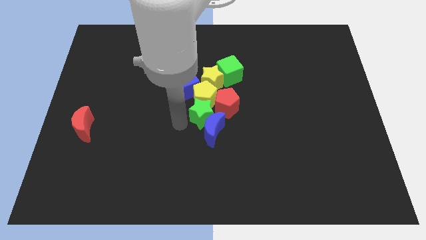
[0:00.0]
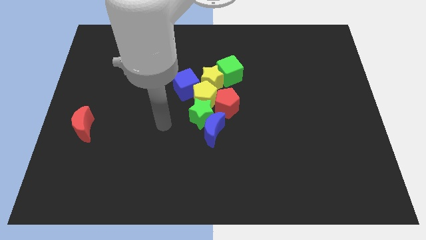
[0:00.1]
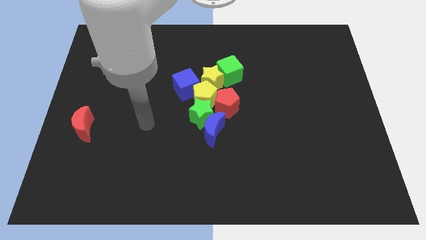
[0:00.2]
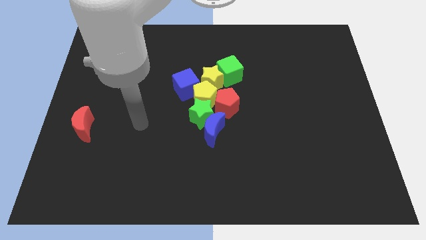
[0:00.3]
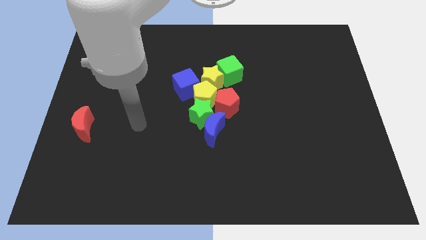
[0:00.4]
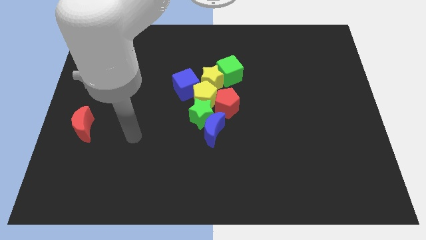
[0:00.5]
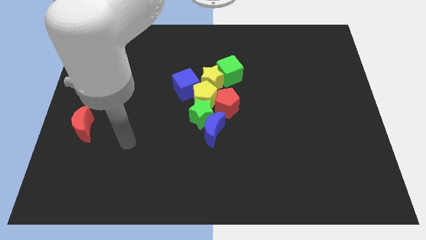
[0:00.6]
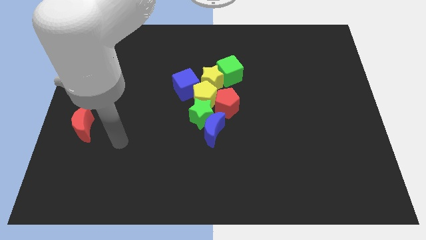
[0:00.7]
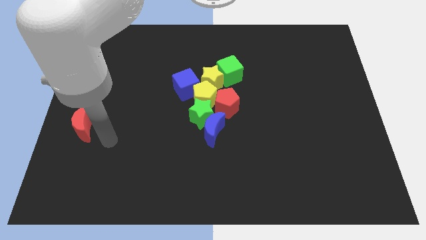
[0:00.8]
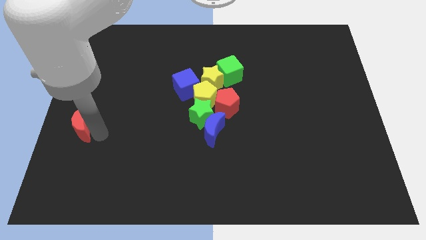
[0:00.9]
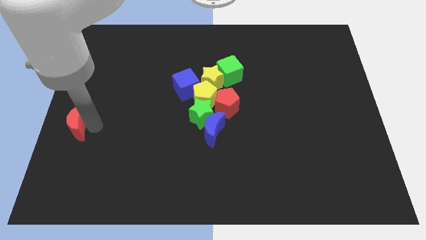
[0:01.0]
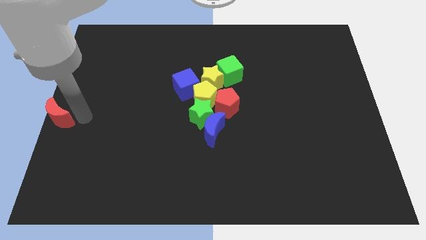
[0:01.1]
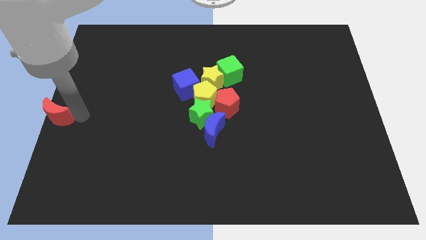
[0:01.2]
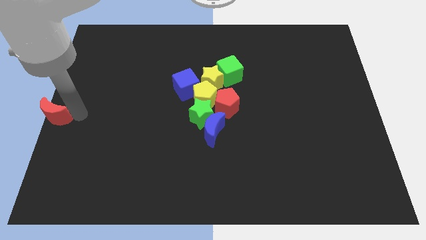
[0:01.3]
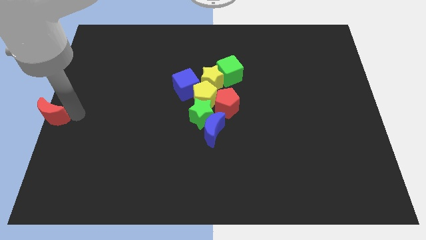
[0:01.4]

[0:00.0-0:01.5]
move the red moon to the left center of the board

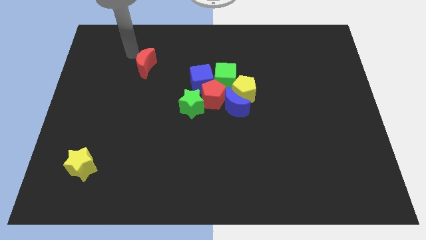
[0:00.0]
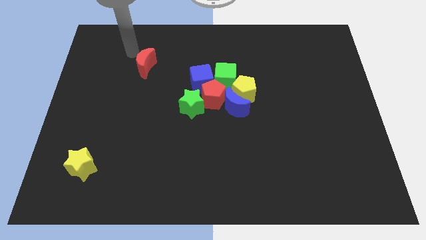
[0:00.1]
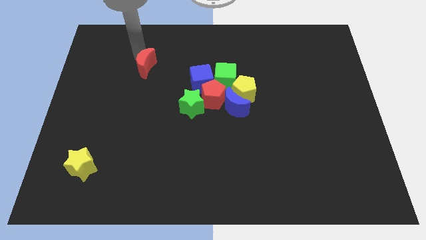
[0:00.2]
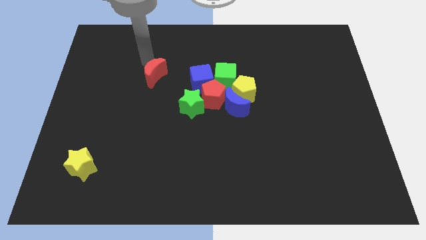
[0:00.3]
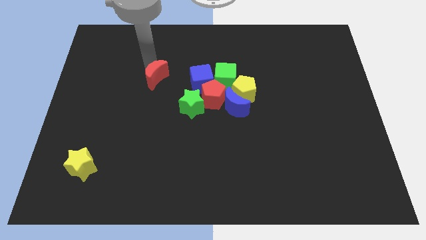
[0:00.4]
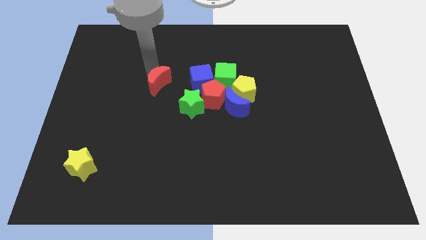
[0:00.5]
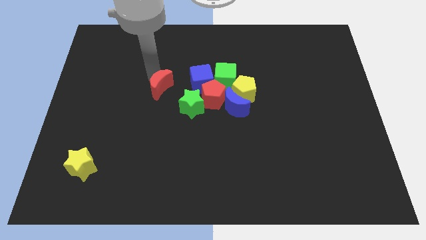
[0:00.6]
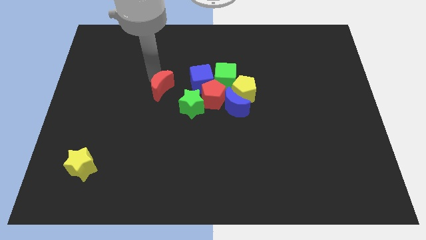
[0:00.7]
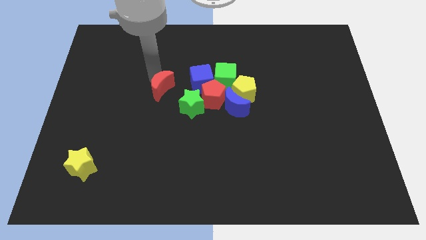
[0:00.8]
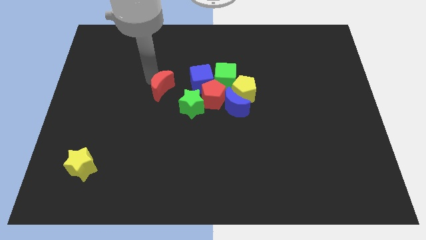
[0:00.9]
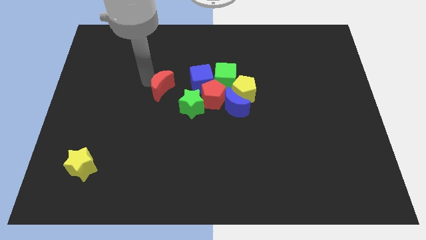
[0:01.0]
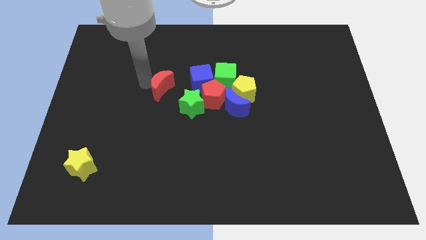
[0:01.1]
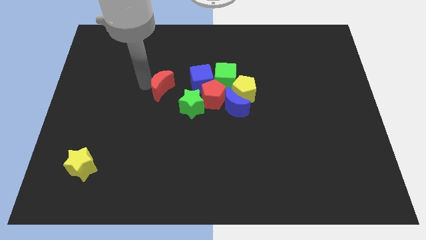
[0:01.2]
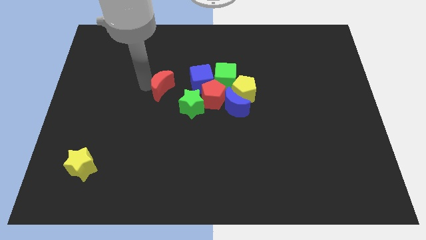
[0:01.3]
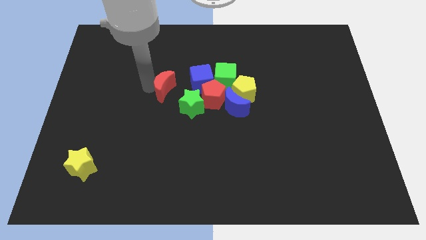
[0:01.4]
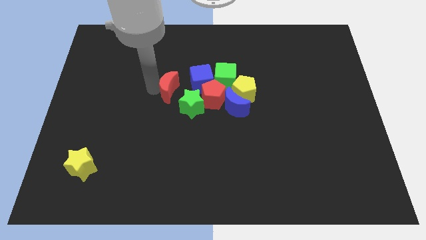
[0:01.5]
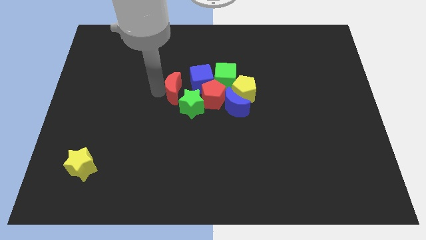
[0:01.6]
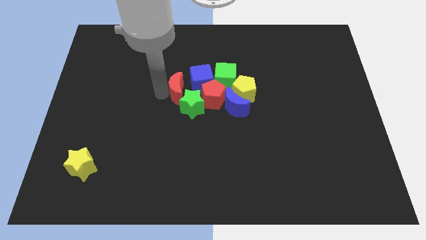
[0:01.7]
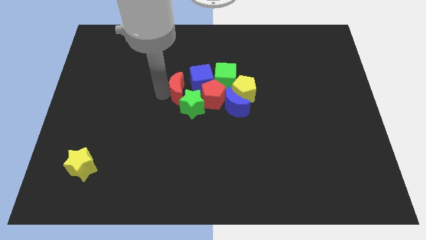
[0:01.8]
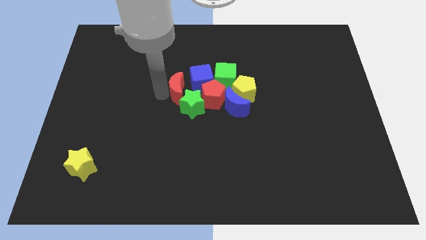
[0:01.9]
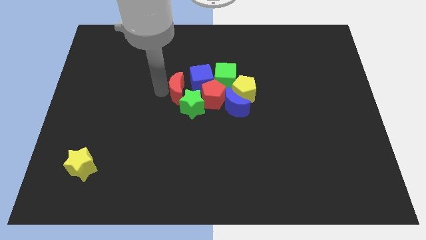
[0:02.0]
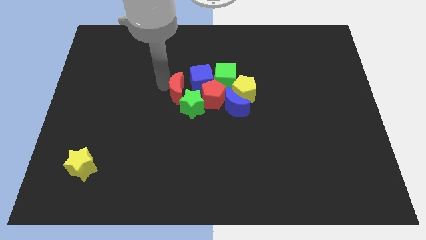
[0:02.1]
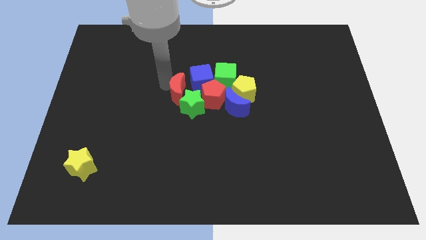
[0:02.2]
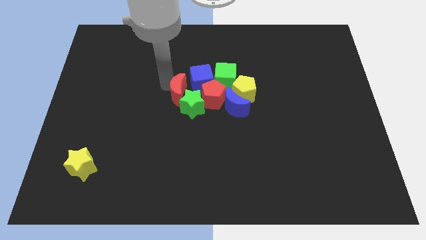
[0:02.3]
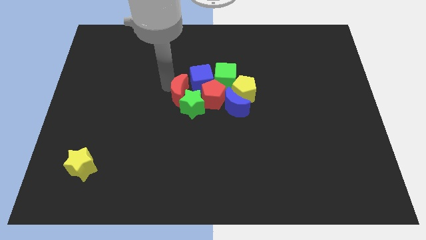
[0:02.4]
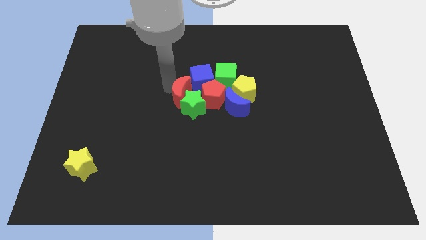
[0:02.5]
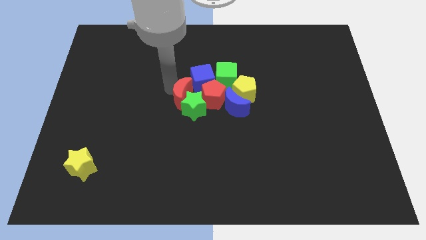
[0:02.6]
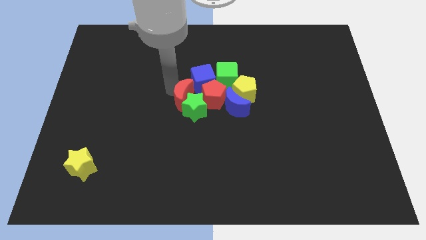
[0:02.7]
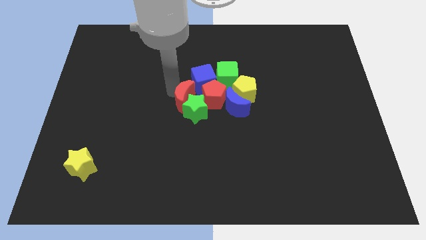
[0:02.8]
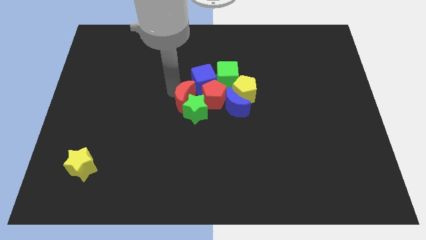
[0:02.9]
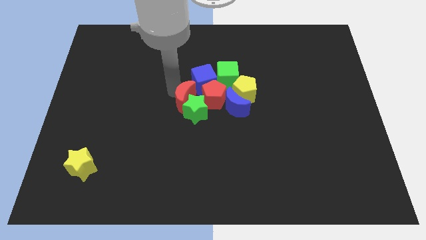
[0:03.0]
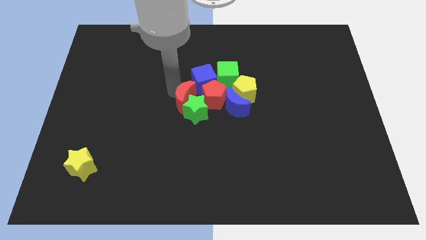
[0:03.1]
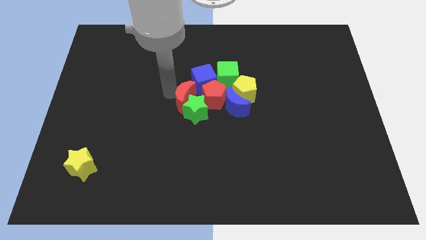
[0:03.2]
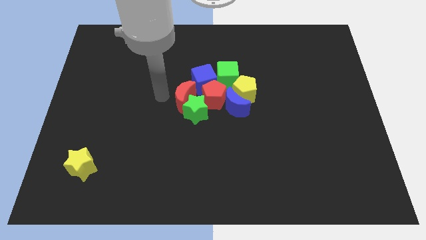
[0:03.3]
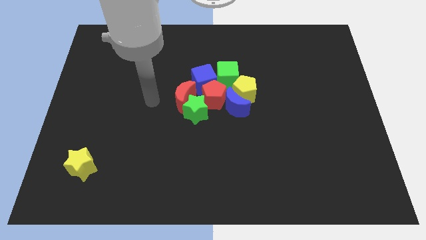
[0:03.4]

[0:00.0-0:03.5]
push red crescent in green star

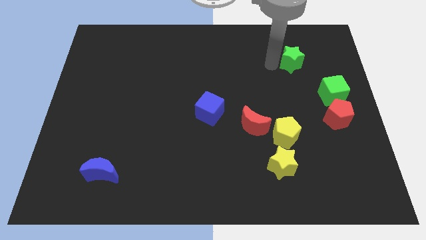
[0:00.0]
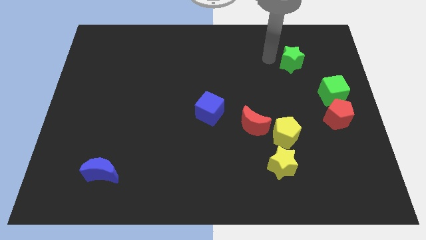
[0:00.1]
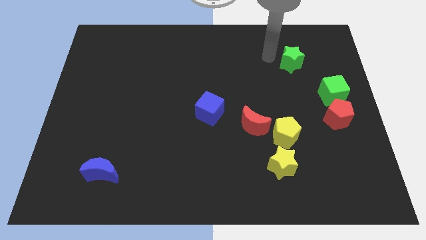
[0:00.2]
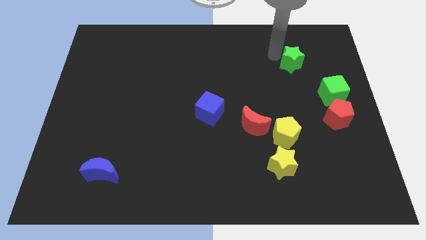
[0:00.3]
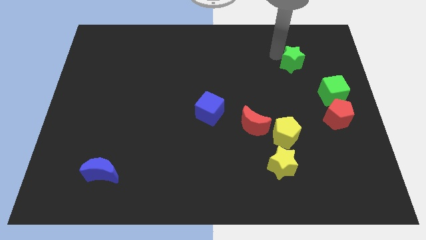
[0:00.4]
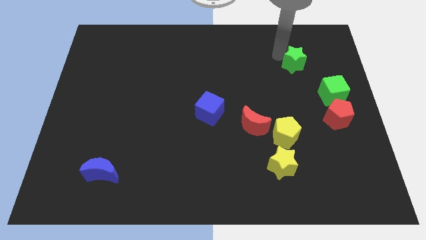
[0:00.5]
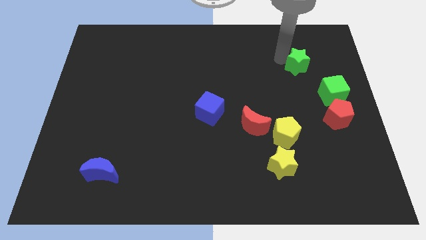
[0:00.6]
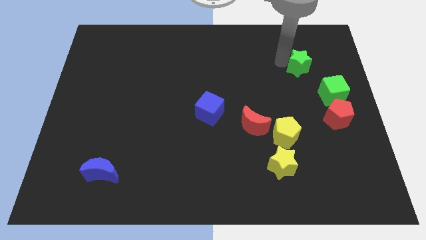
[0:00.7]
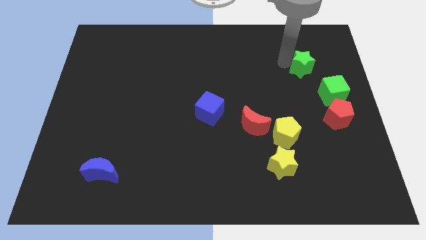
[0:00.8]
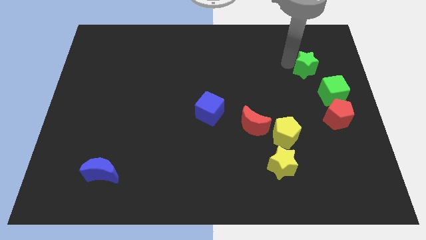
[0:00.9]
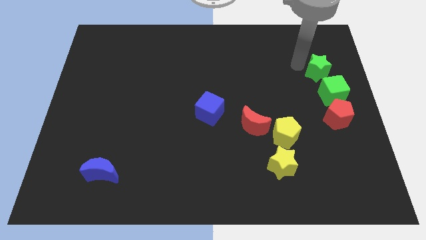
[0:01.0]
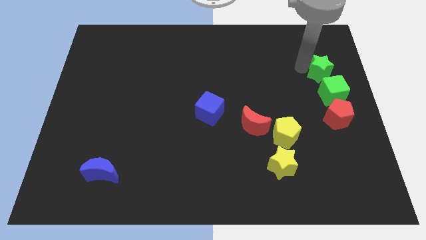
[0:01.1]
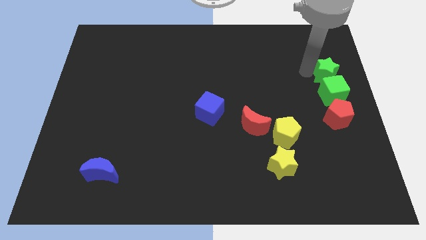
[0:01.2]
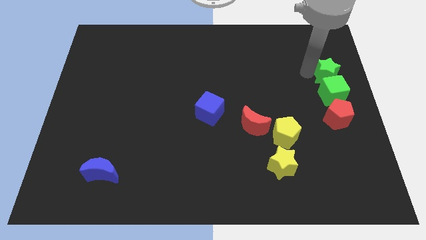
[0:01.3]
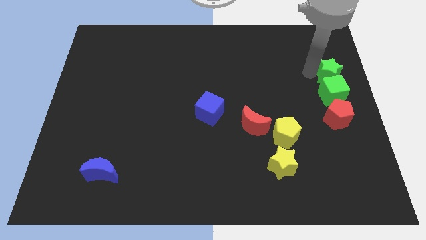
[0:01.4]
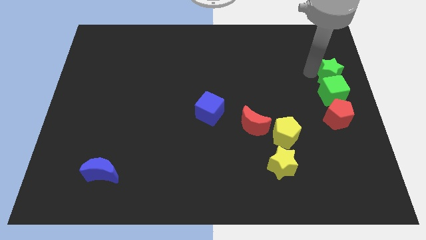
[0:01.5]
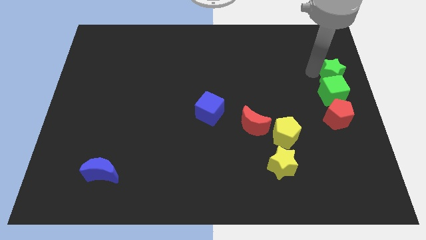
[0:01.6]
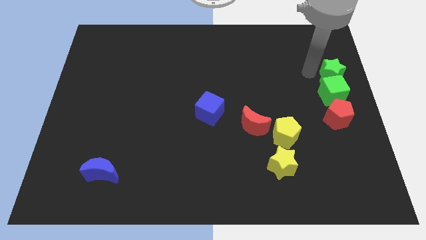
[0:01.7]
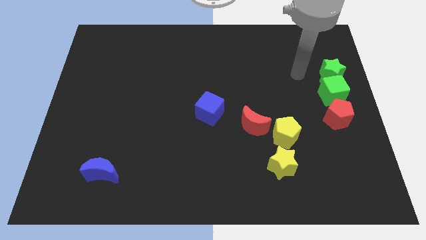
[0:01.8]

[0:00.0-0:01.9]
move the green star to the top of the green cube

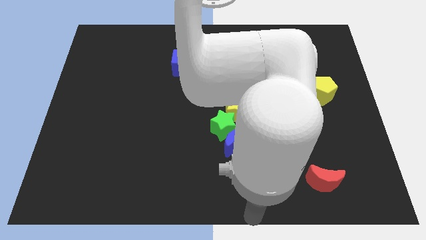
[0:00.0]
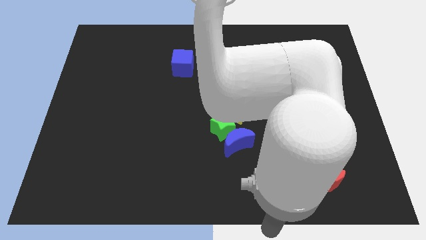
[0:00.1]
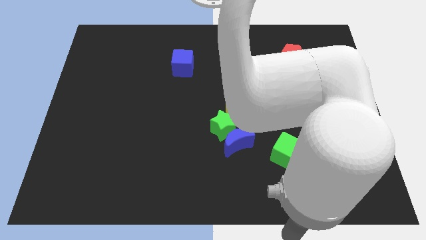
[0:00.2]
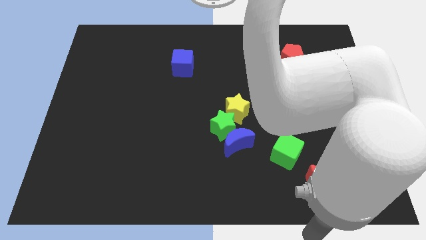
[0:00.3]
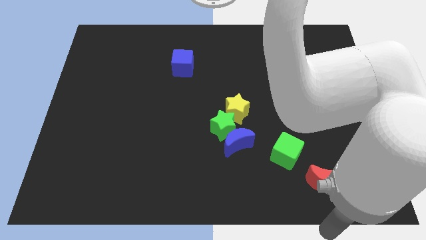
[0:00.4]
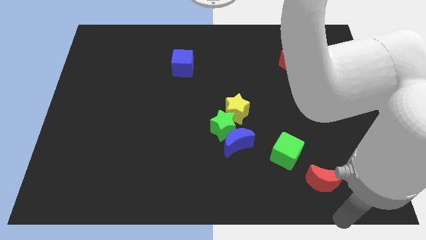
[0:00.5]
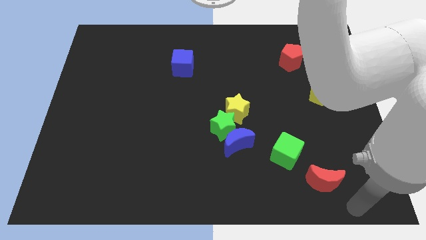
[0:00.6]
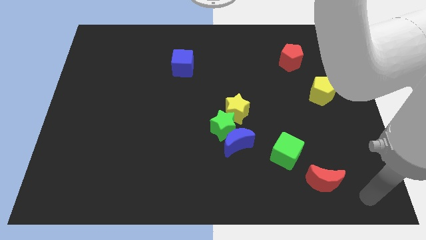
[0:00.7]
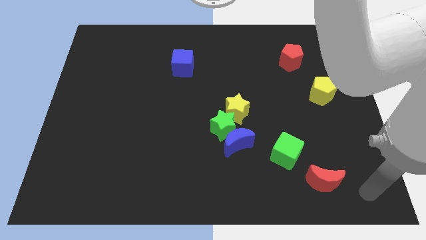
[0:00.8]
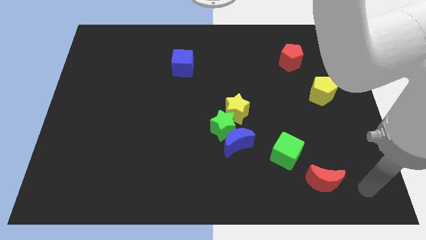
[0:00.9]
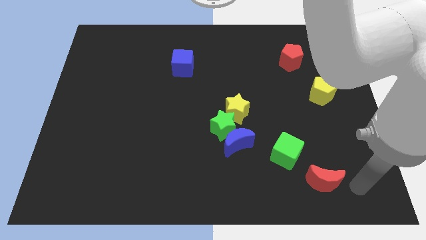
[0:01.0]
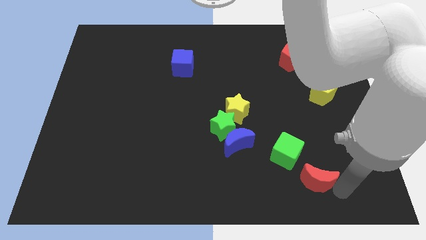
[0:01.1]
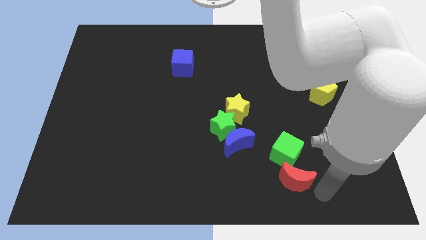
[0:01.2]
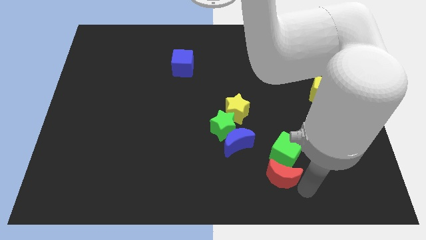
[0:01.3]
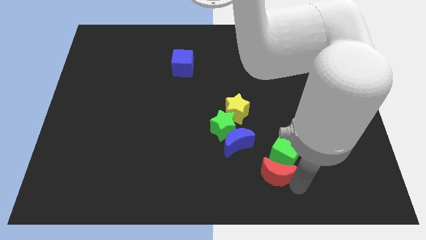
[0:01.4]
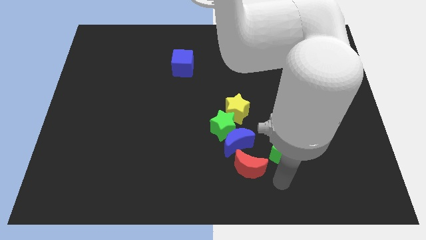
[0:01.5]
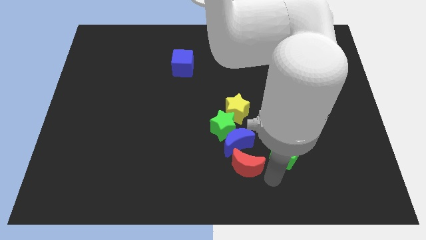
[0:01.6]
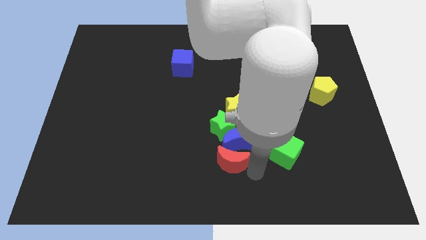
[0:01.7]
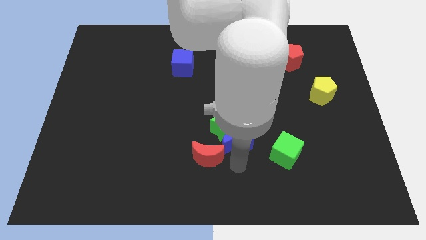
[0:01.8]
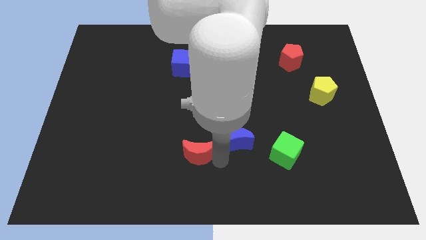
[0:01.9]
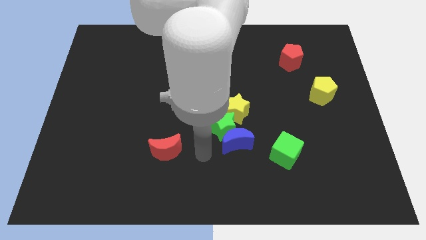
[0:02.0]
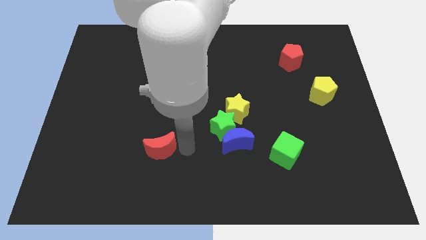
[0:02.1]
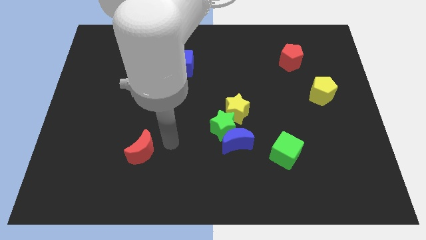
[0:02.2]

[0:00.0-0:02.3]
move the red moon horizontally left to the blue moon
